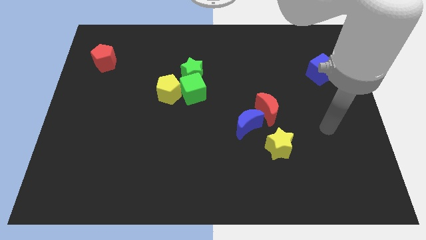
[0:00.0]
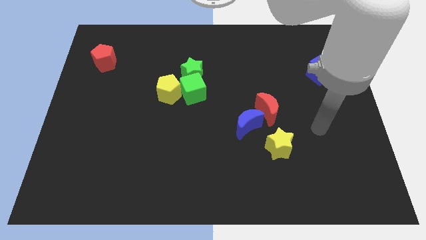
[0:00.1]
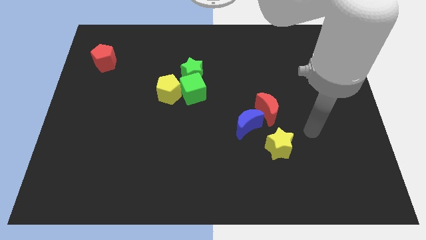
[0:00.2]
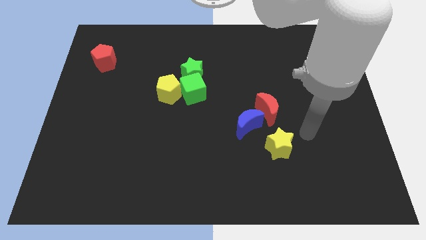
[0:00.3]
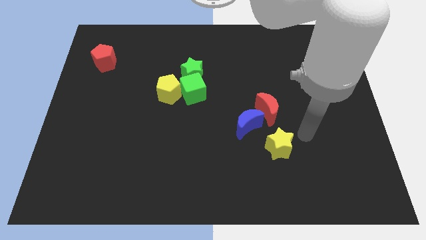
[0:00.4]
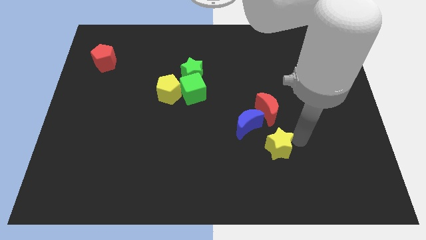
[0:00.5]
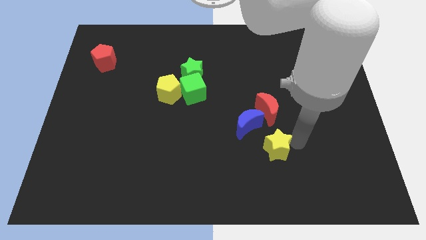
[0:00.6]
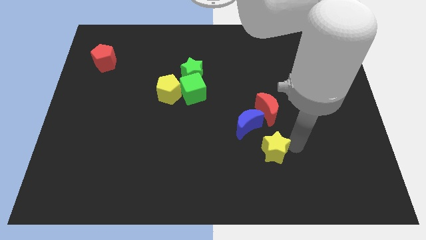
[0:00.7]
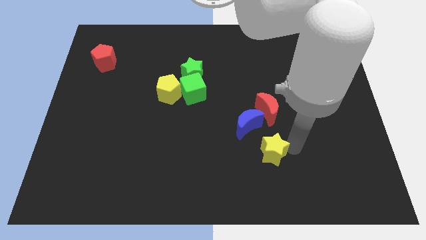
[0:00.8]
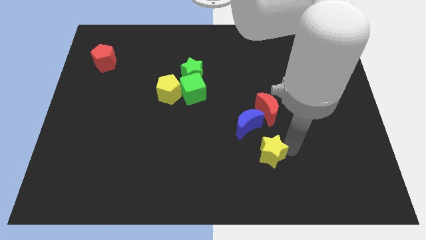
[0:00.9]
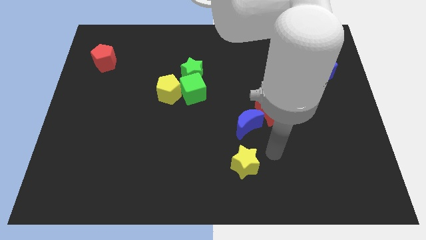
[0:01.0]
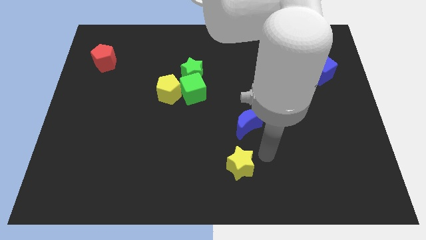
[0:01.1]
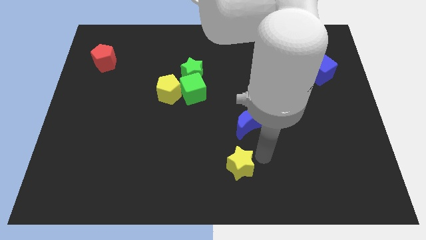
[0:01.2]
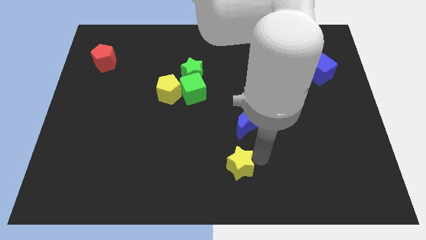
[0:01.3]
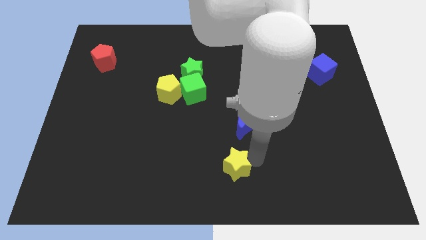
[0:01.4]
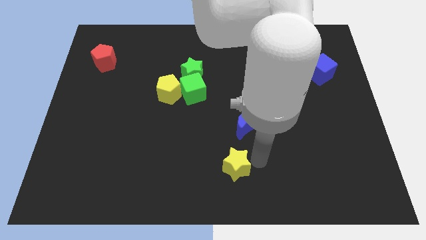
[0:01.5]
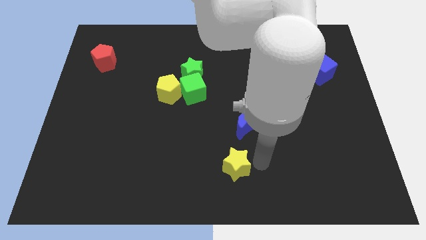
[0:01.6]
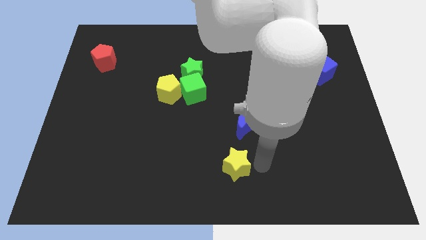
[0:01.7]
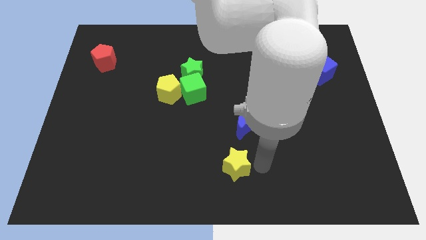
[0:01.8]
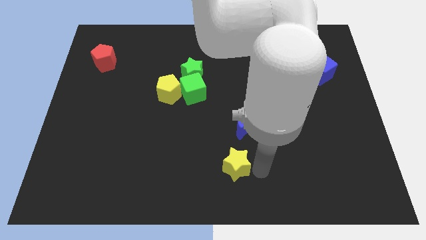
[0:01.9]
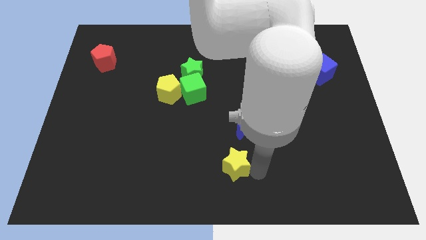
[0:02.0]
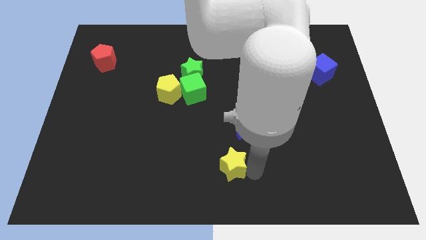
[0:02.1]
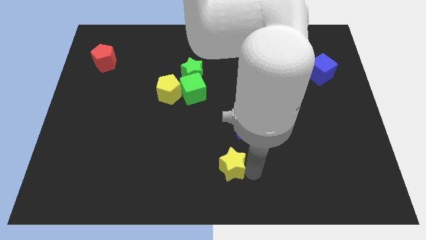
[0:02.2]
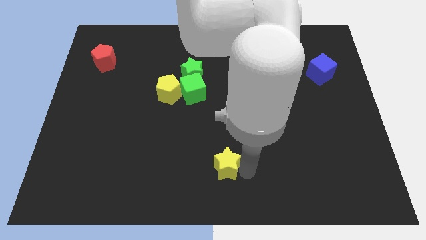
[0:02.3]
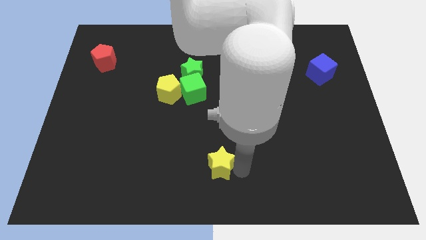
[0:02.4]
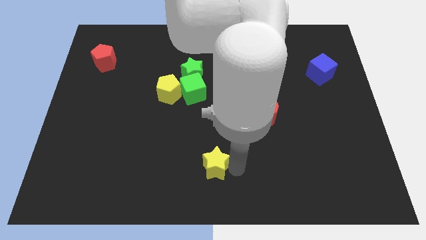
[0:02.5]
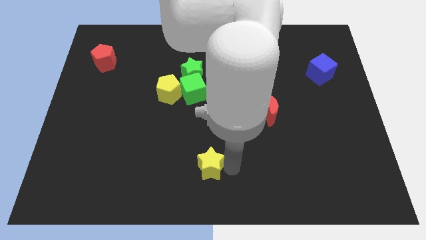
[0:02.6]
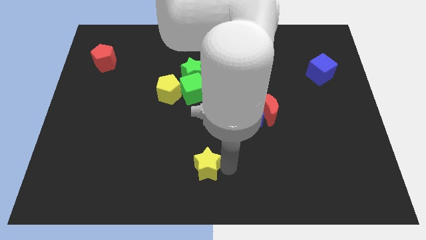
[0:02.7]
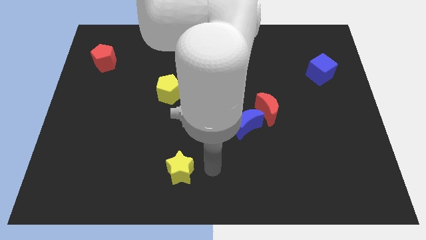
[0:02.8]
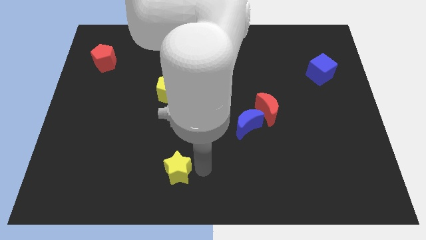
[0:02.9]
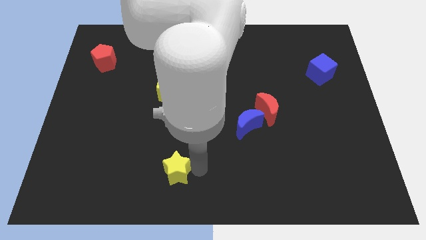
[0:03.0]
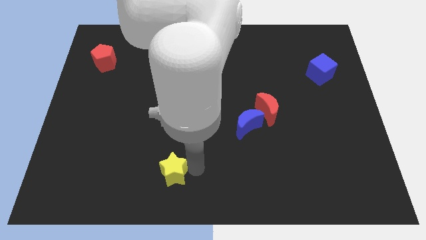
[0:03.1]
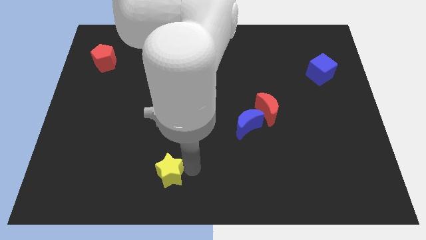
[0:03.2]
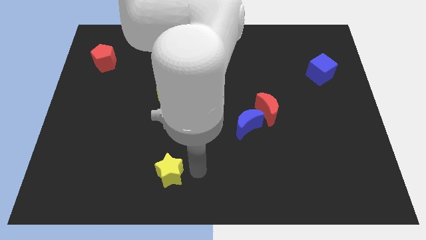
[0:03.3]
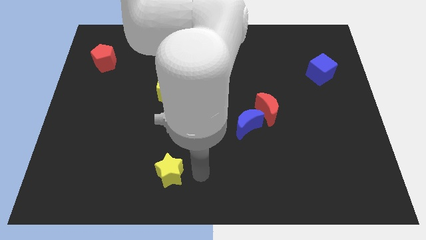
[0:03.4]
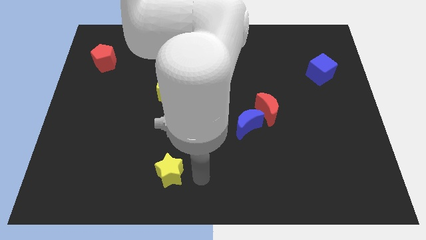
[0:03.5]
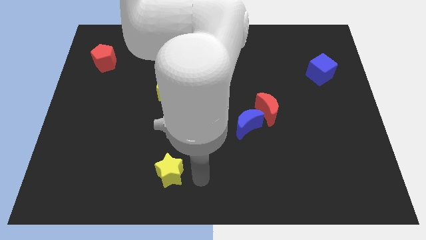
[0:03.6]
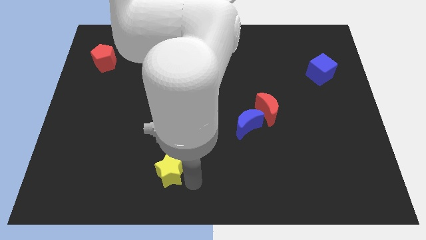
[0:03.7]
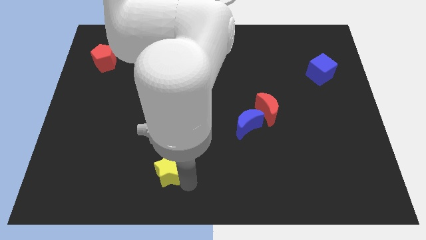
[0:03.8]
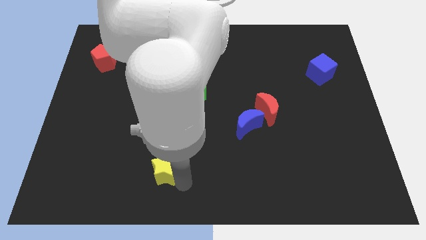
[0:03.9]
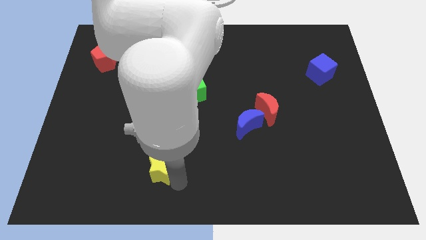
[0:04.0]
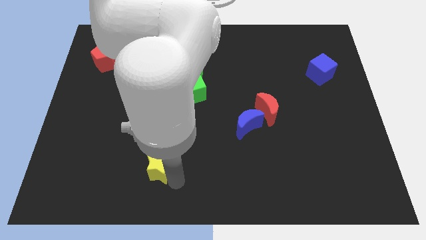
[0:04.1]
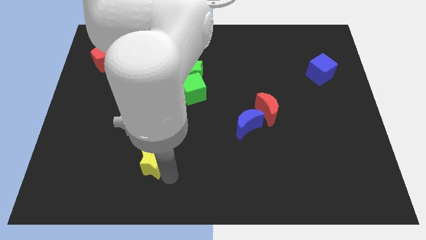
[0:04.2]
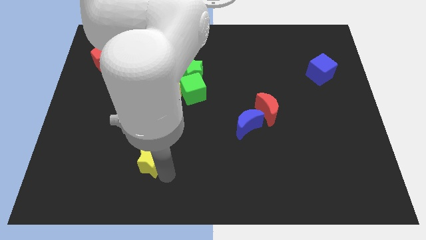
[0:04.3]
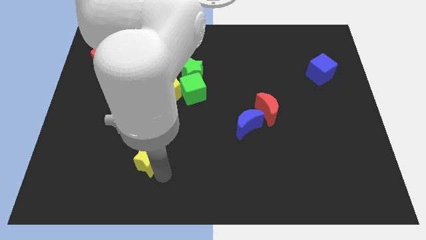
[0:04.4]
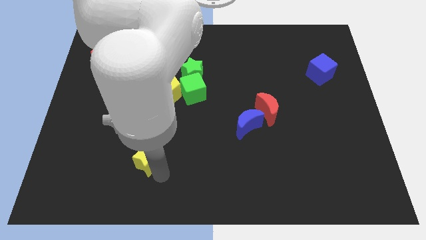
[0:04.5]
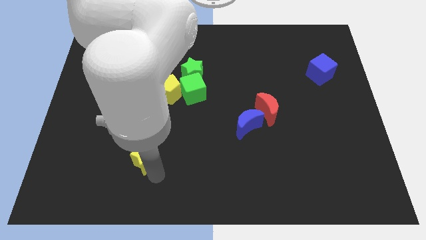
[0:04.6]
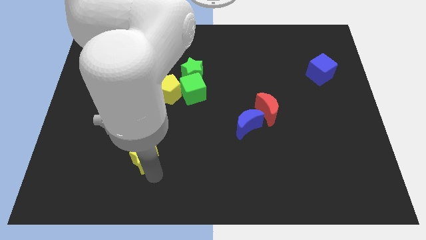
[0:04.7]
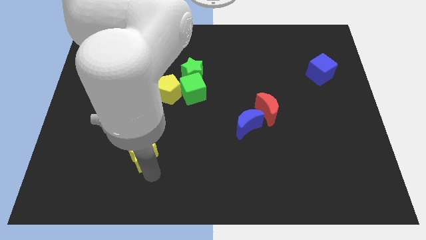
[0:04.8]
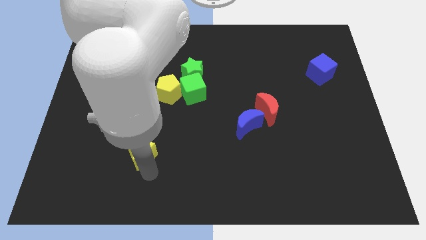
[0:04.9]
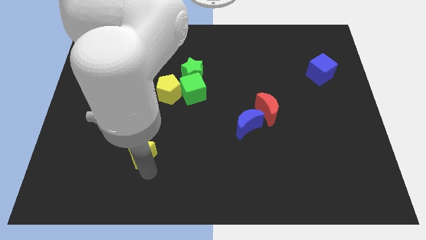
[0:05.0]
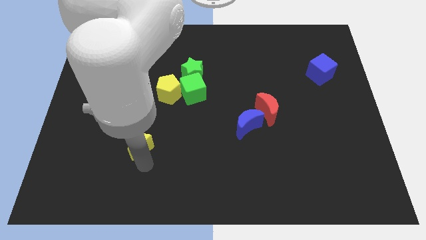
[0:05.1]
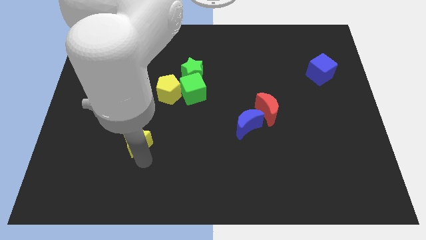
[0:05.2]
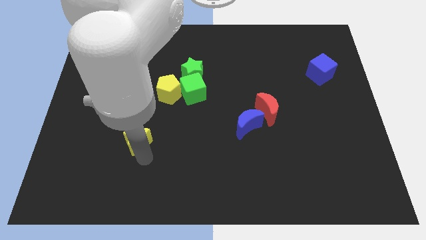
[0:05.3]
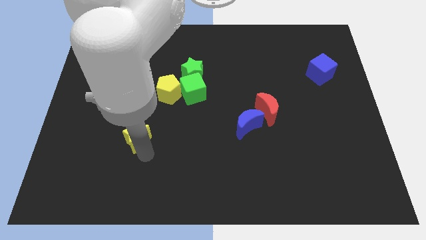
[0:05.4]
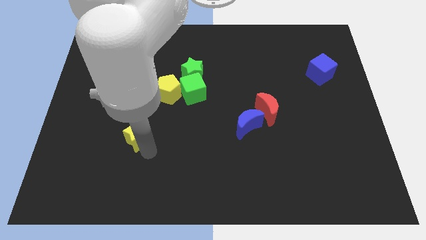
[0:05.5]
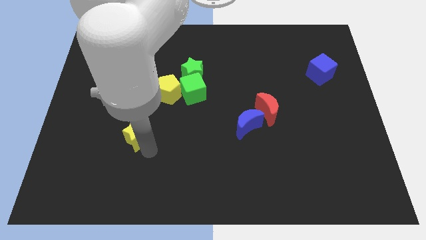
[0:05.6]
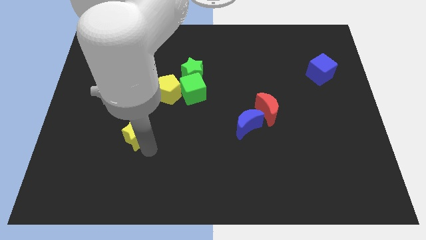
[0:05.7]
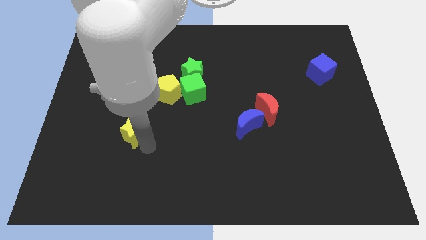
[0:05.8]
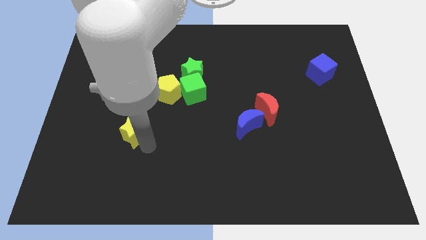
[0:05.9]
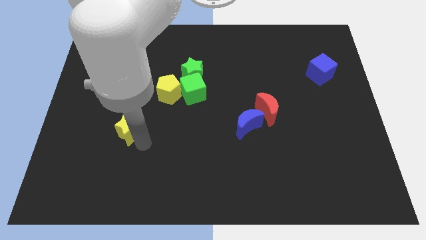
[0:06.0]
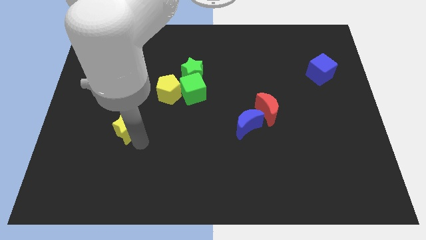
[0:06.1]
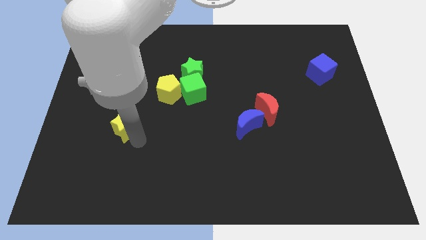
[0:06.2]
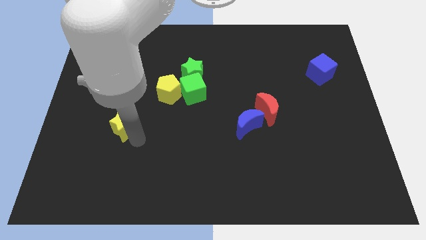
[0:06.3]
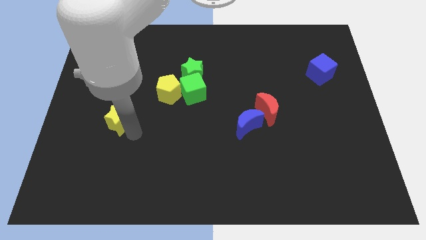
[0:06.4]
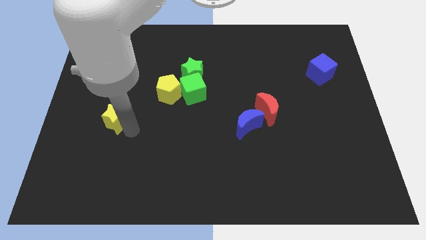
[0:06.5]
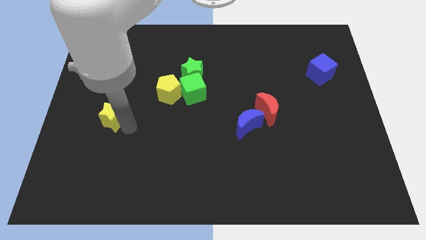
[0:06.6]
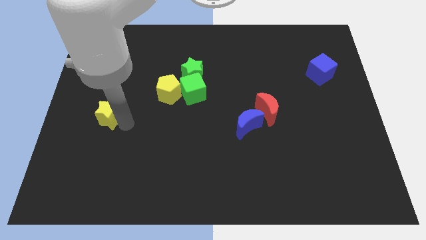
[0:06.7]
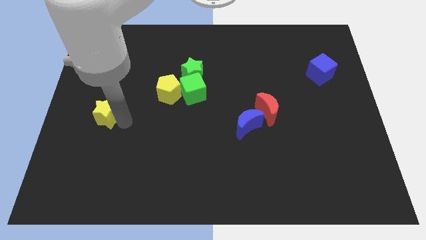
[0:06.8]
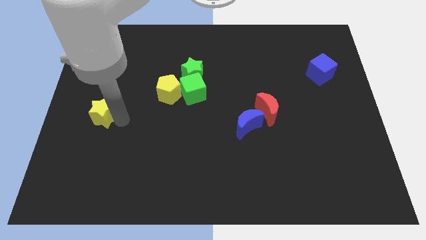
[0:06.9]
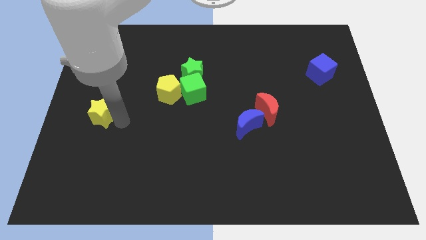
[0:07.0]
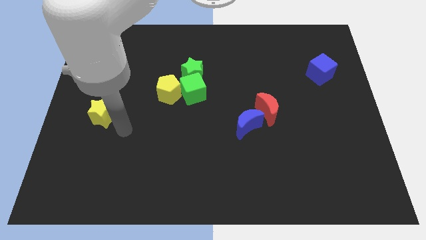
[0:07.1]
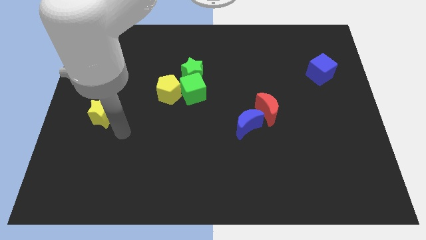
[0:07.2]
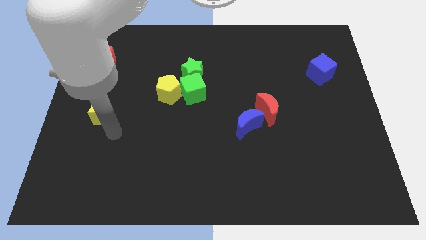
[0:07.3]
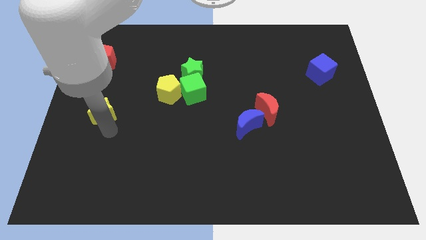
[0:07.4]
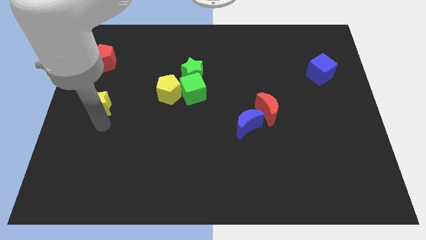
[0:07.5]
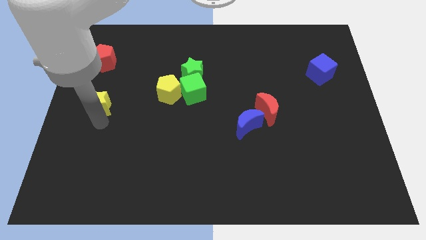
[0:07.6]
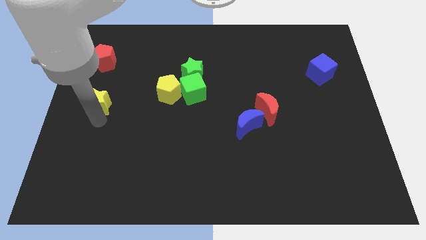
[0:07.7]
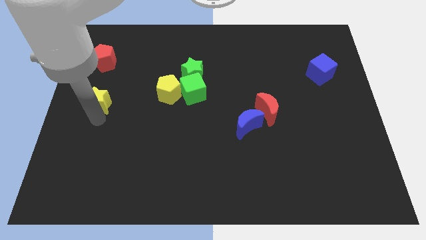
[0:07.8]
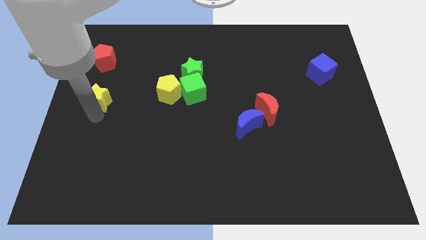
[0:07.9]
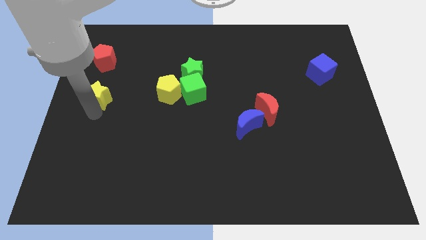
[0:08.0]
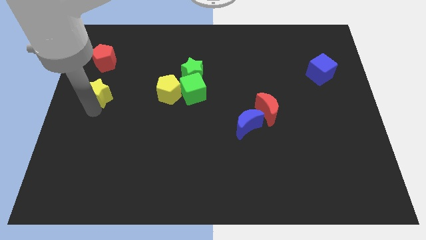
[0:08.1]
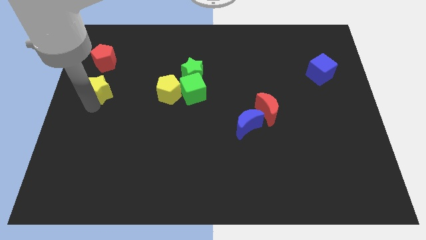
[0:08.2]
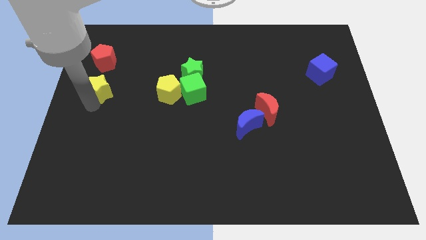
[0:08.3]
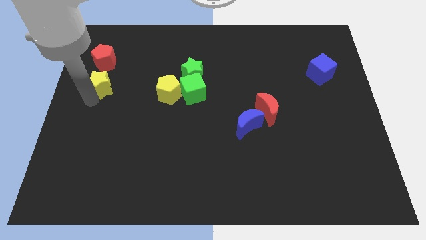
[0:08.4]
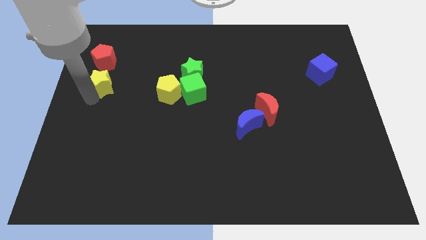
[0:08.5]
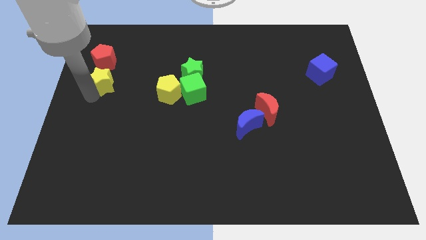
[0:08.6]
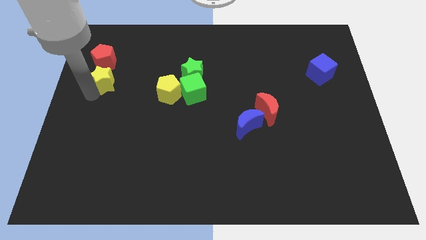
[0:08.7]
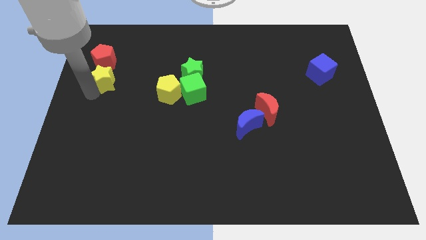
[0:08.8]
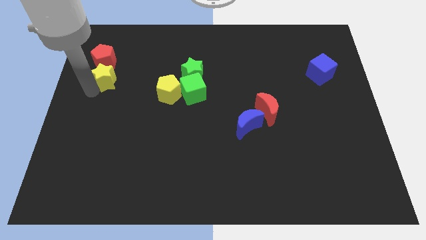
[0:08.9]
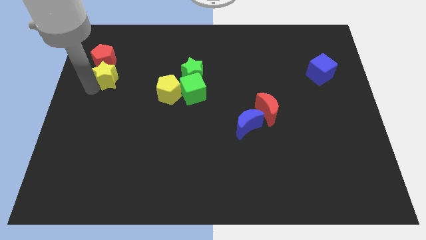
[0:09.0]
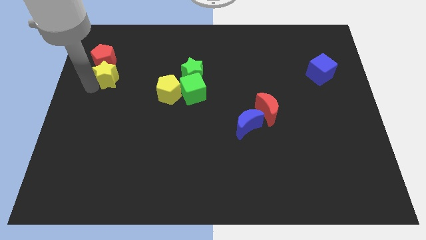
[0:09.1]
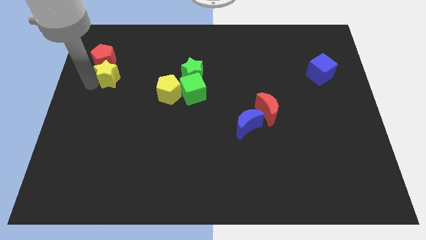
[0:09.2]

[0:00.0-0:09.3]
move the yellow star to the red pentagon
